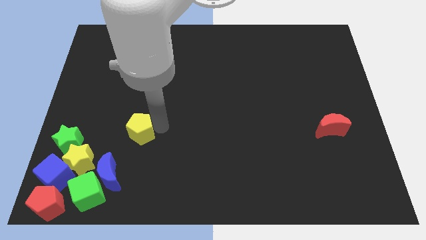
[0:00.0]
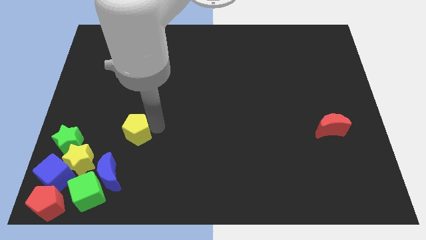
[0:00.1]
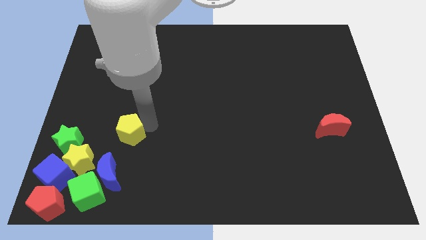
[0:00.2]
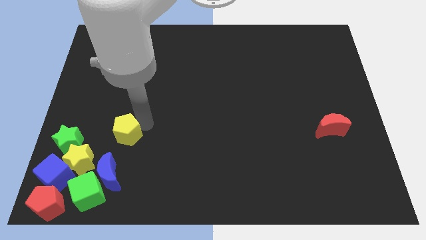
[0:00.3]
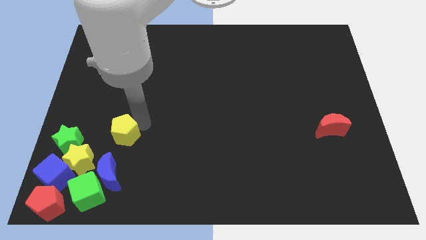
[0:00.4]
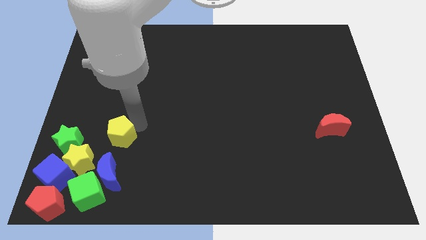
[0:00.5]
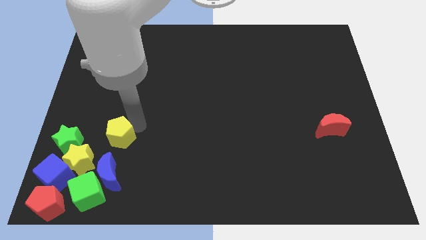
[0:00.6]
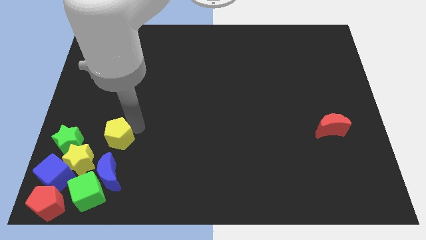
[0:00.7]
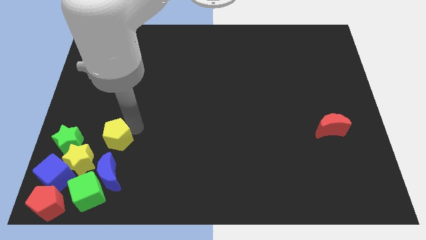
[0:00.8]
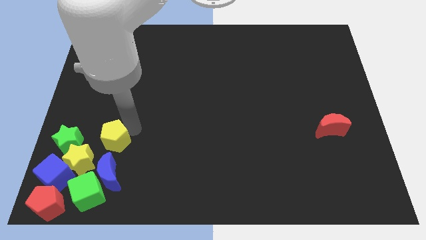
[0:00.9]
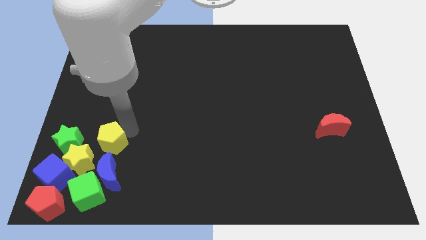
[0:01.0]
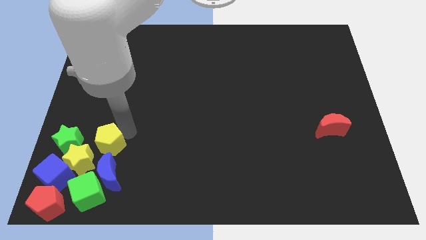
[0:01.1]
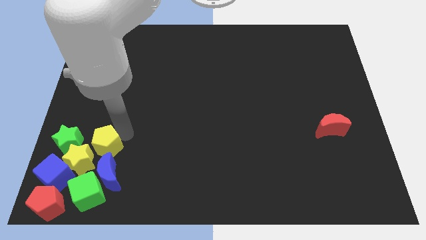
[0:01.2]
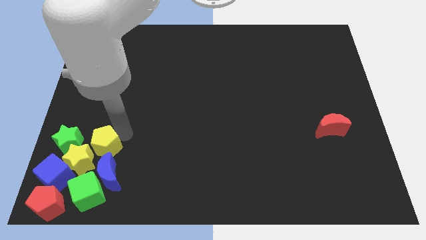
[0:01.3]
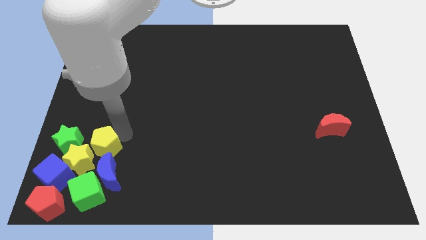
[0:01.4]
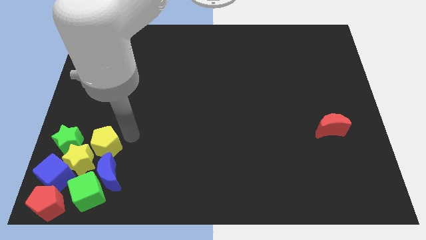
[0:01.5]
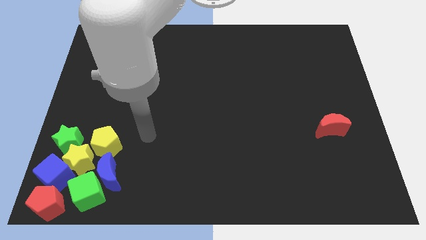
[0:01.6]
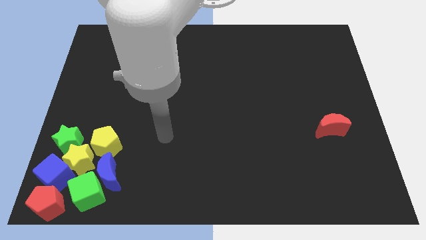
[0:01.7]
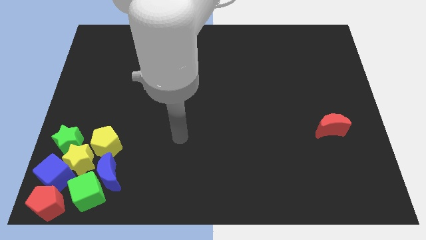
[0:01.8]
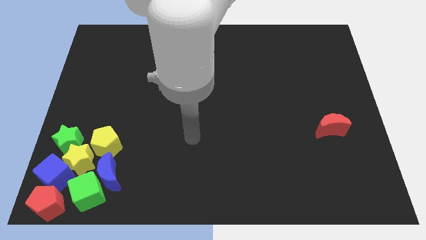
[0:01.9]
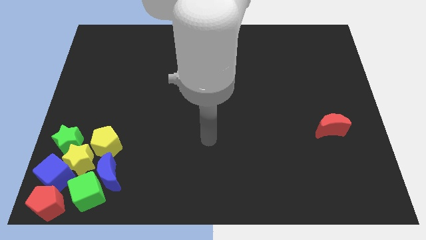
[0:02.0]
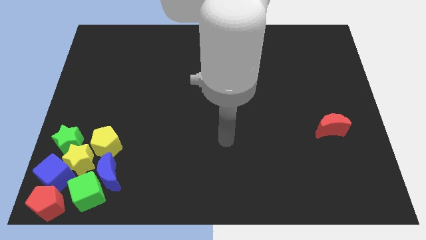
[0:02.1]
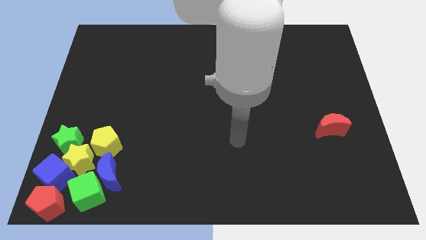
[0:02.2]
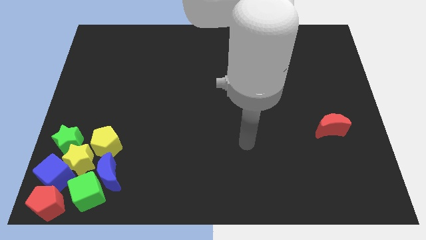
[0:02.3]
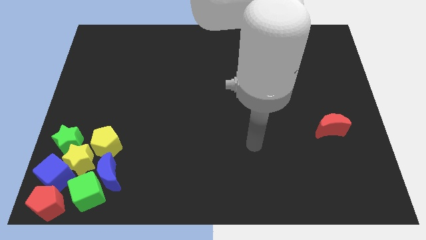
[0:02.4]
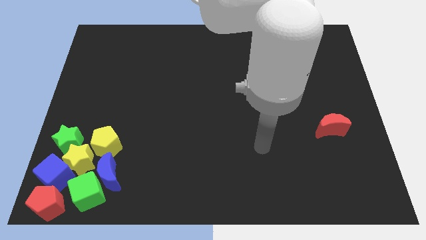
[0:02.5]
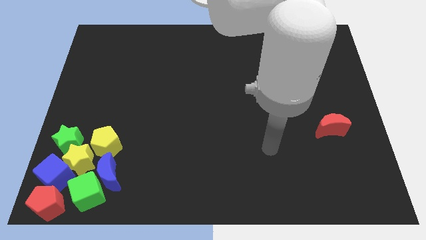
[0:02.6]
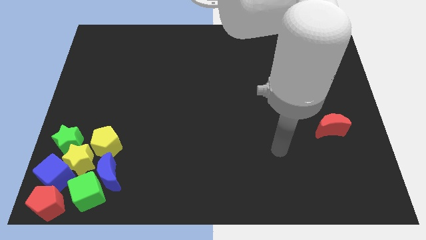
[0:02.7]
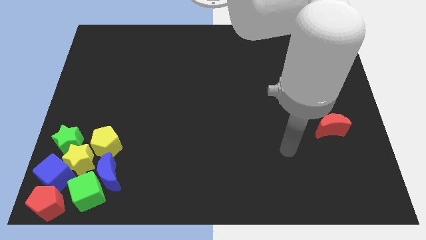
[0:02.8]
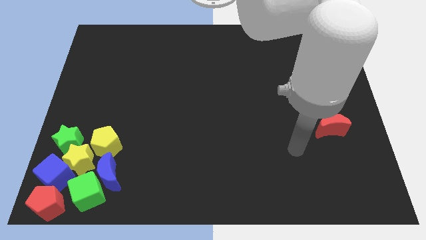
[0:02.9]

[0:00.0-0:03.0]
put the yellow pentagon above the blue crescent

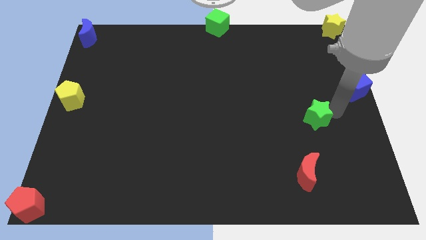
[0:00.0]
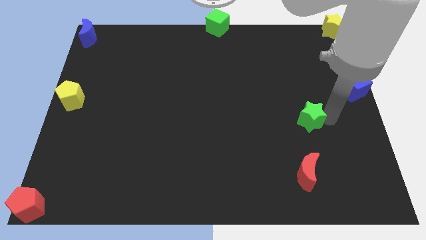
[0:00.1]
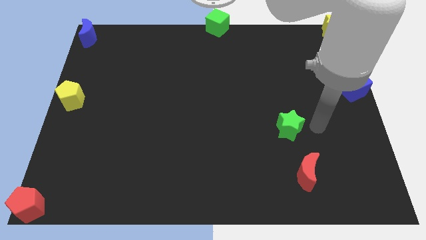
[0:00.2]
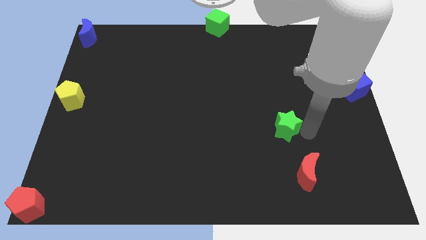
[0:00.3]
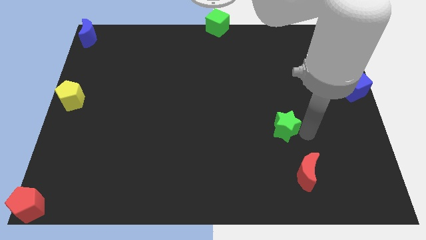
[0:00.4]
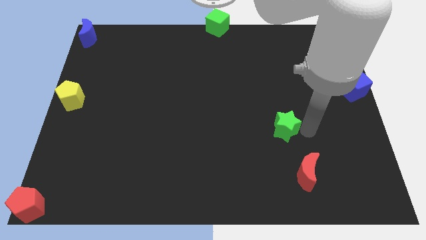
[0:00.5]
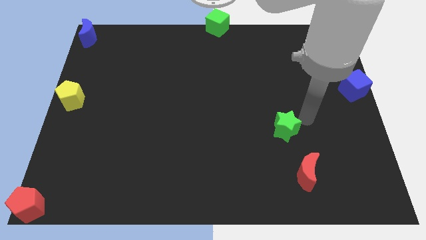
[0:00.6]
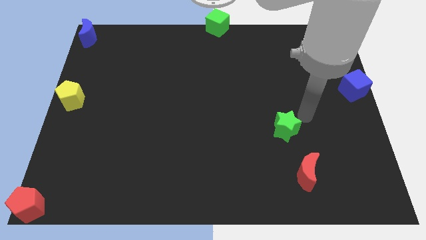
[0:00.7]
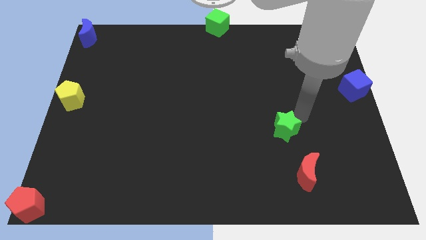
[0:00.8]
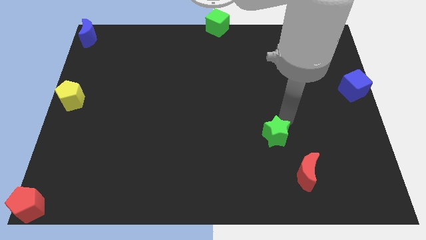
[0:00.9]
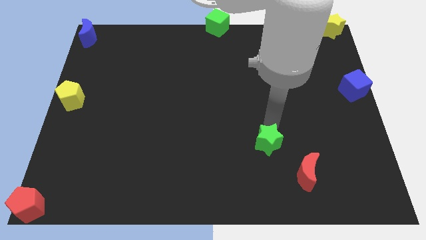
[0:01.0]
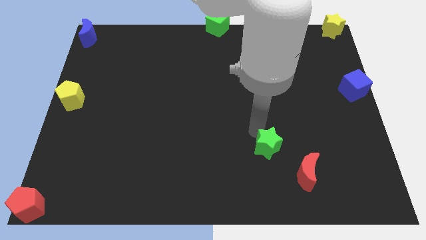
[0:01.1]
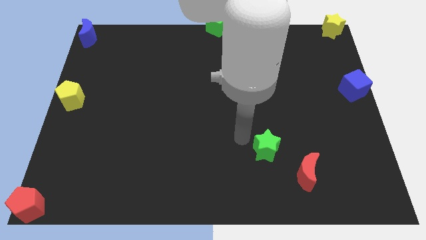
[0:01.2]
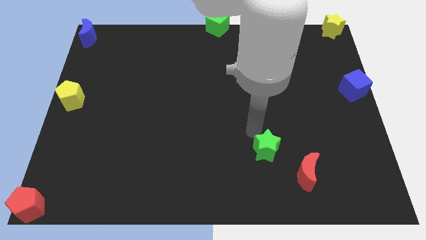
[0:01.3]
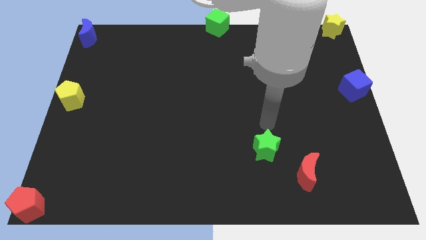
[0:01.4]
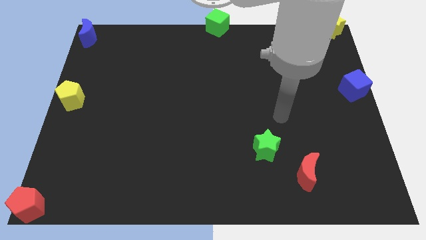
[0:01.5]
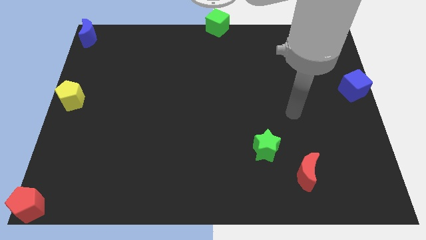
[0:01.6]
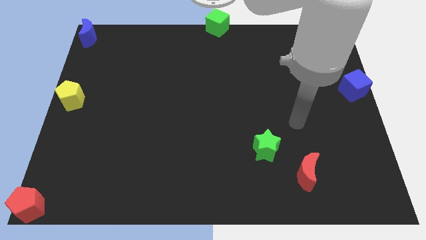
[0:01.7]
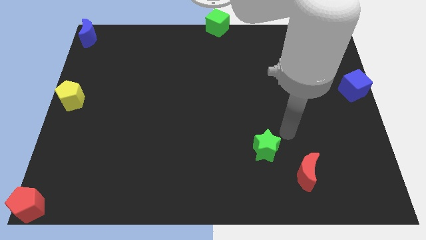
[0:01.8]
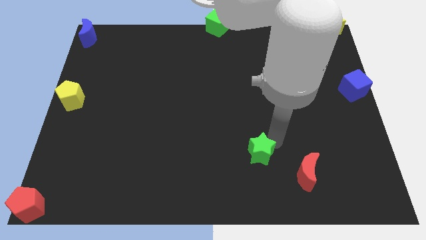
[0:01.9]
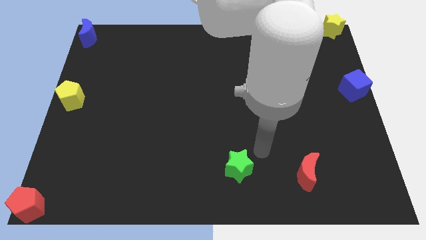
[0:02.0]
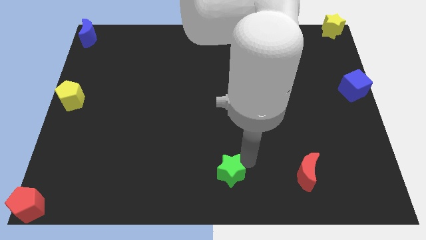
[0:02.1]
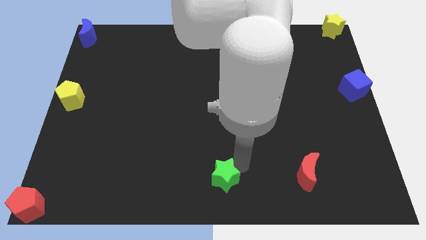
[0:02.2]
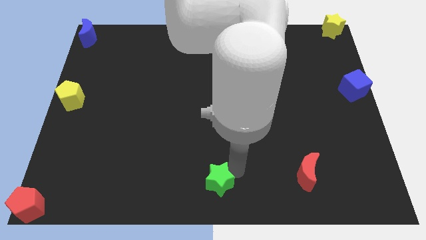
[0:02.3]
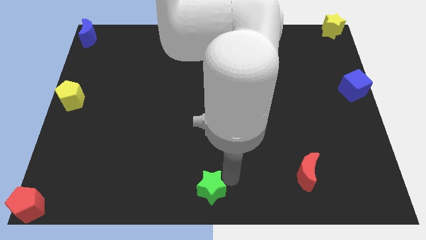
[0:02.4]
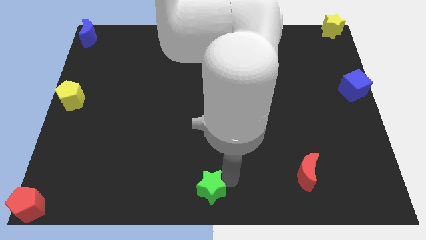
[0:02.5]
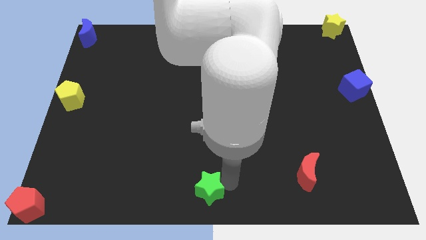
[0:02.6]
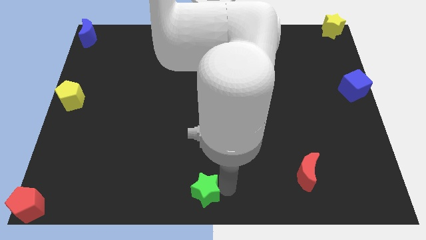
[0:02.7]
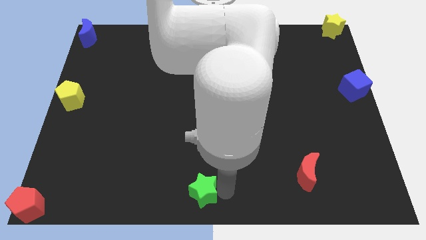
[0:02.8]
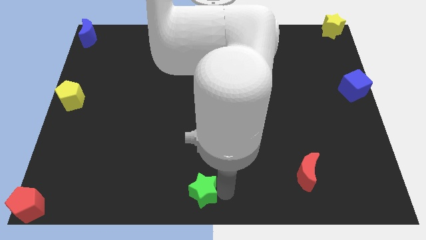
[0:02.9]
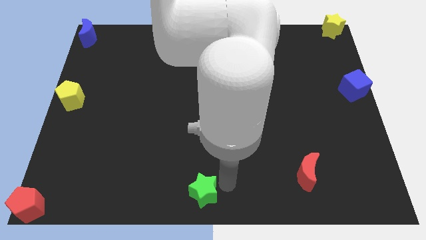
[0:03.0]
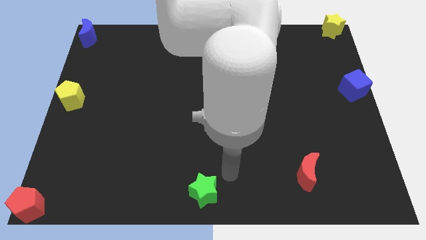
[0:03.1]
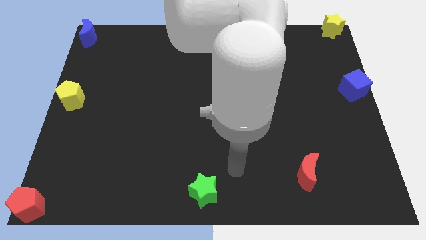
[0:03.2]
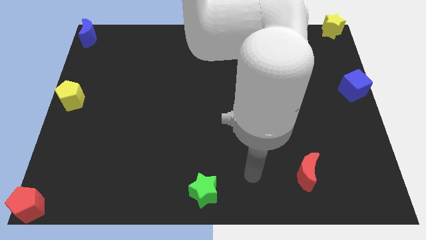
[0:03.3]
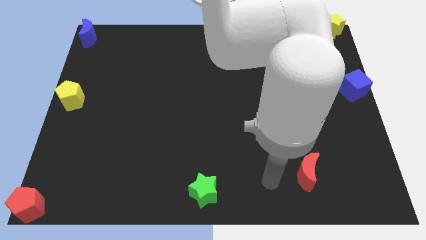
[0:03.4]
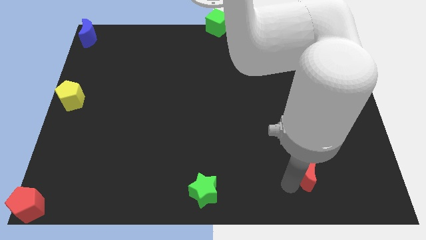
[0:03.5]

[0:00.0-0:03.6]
place the green star to the bottom center of the board

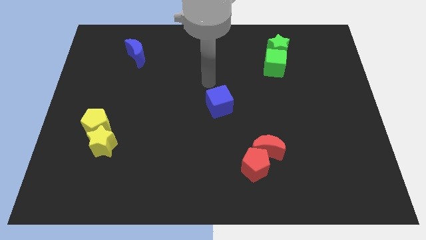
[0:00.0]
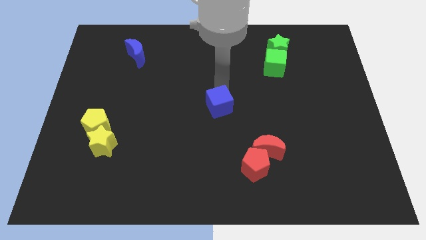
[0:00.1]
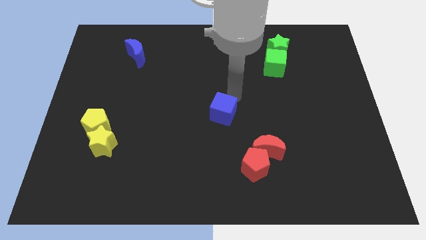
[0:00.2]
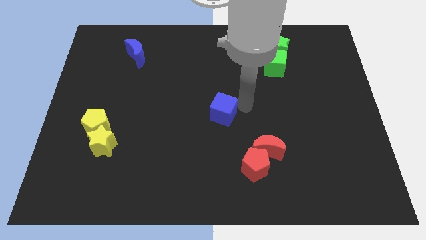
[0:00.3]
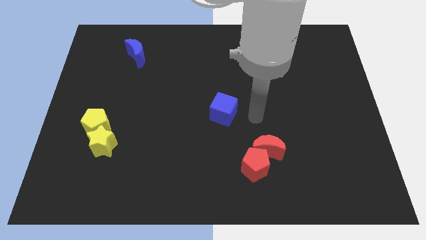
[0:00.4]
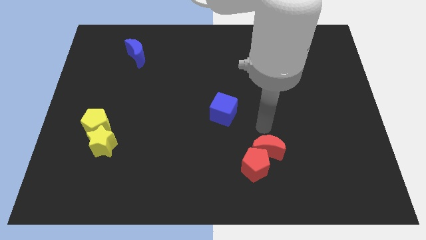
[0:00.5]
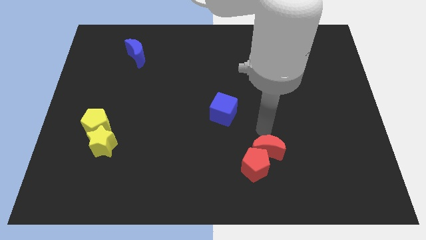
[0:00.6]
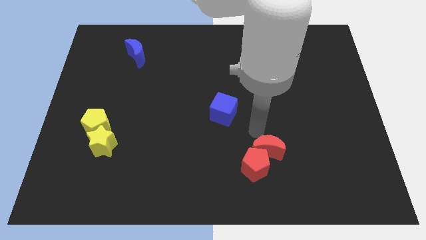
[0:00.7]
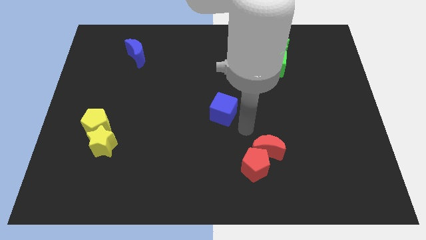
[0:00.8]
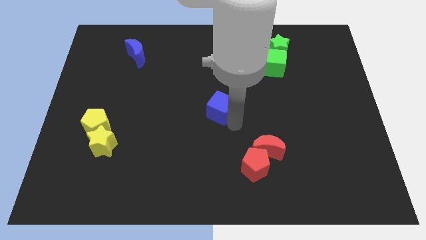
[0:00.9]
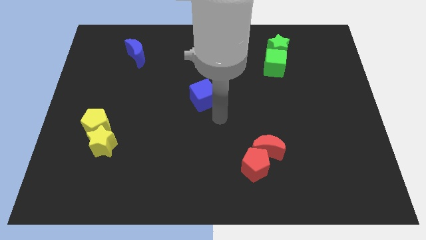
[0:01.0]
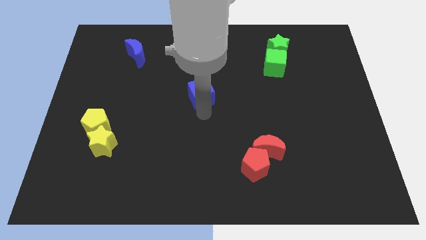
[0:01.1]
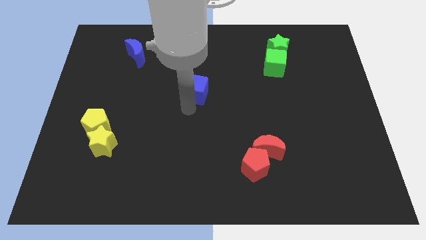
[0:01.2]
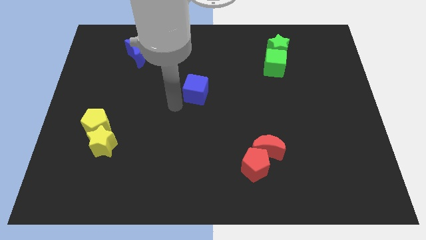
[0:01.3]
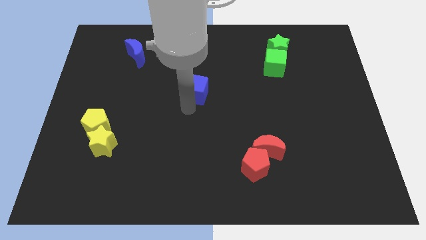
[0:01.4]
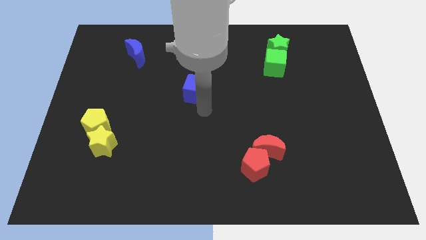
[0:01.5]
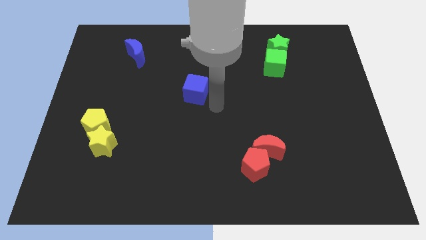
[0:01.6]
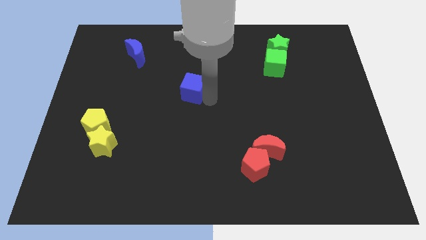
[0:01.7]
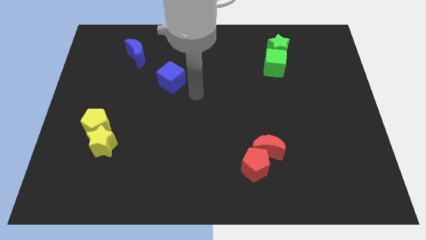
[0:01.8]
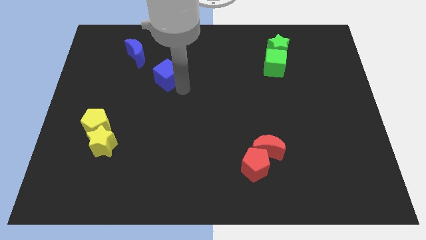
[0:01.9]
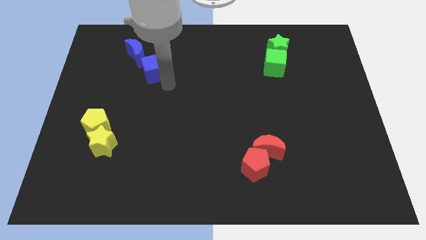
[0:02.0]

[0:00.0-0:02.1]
move the blue cube towards the bottom side of the blue crescent

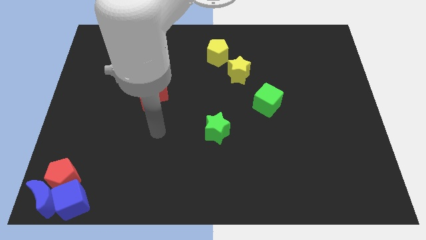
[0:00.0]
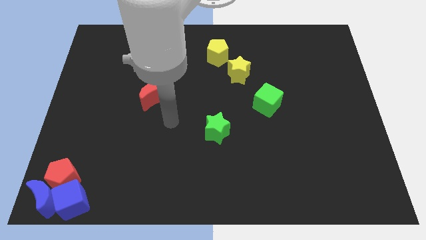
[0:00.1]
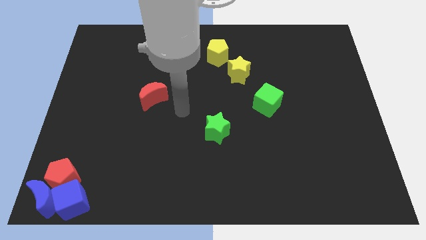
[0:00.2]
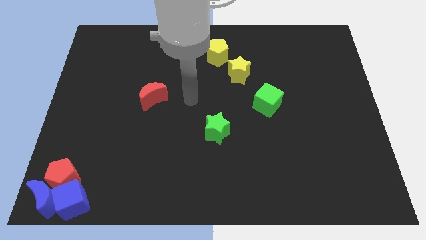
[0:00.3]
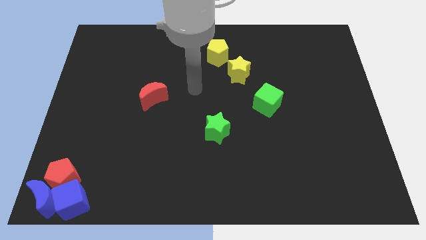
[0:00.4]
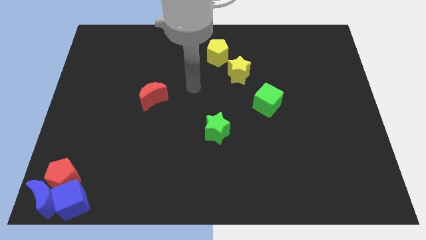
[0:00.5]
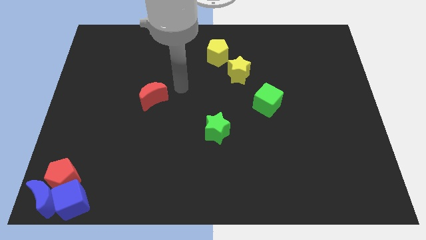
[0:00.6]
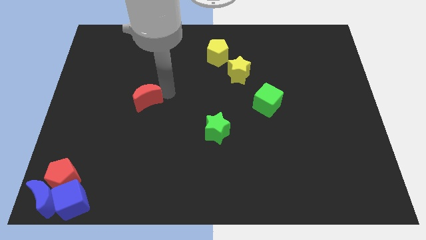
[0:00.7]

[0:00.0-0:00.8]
place your arm to the right side of red crescent
